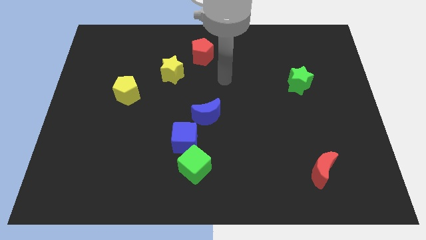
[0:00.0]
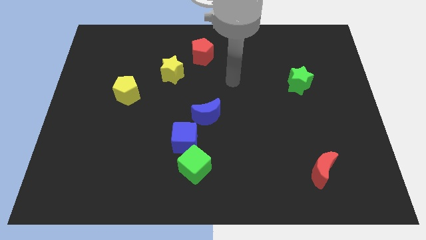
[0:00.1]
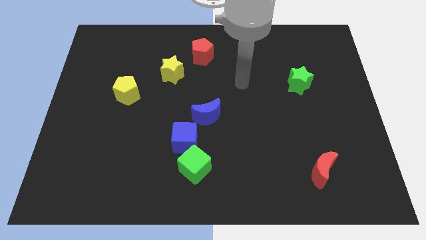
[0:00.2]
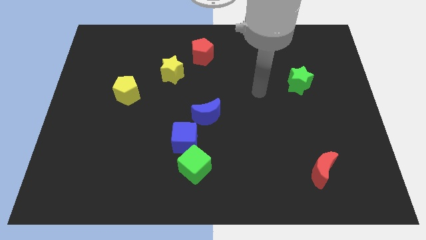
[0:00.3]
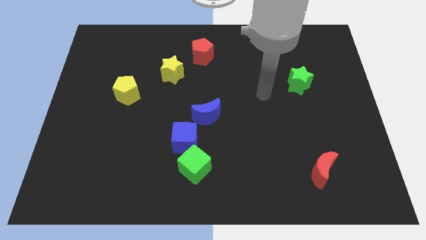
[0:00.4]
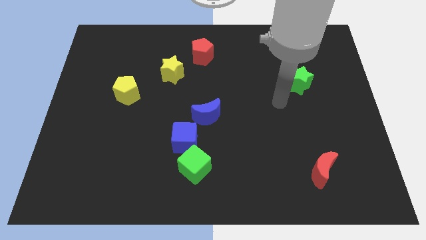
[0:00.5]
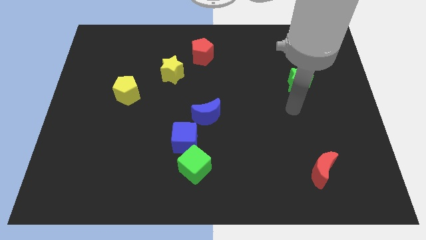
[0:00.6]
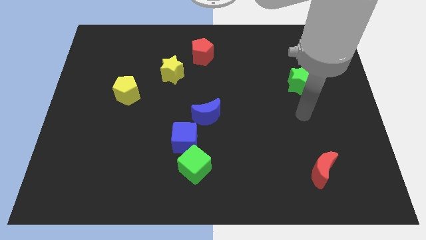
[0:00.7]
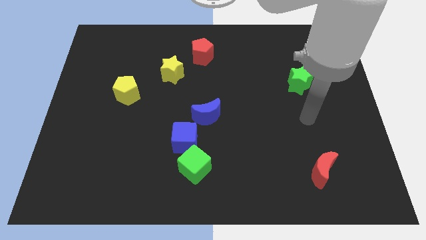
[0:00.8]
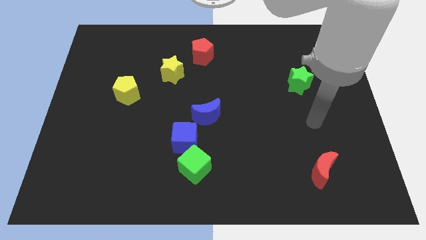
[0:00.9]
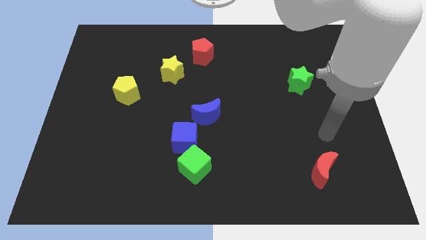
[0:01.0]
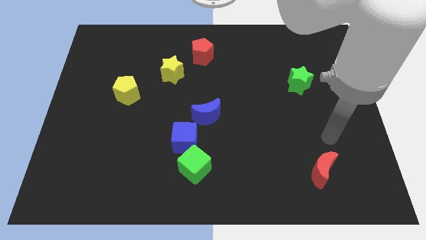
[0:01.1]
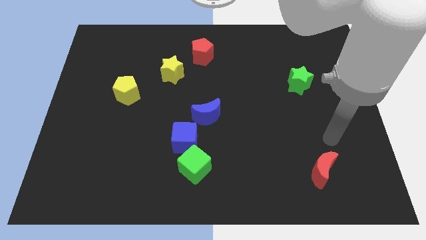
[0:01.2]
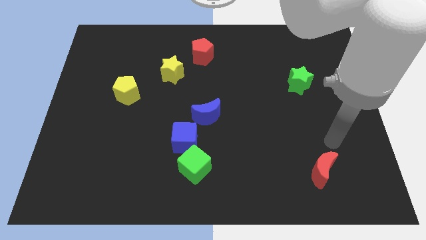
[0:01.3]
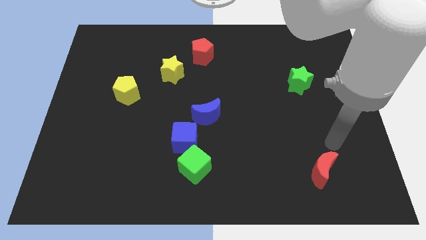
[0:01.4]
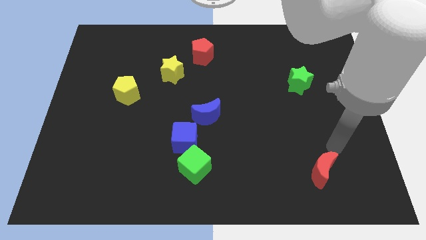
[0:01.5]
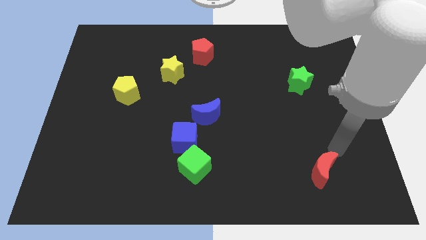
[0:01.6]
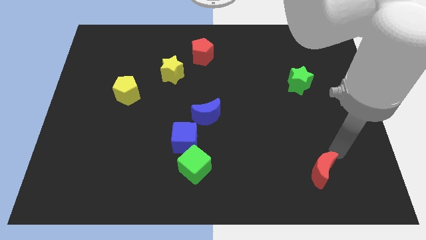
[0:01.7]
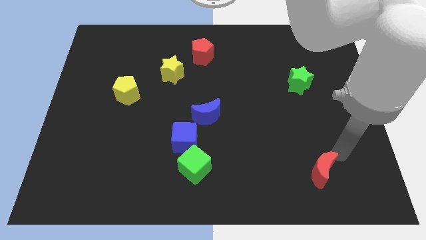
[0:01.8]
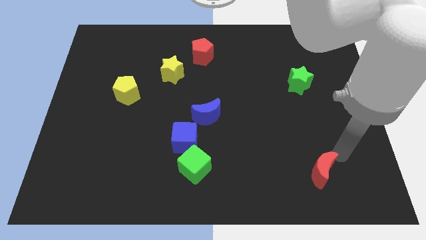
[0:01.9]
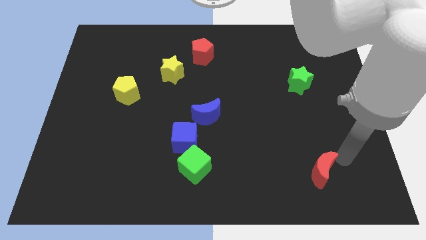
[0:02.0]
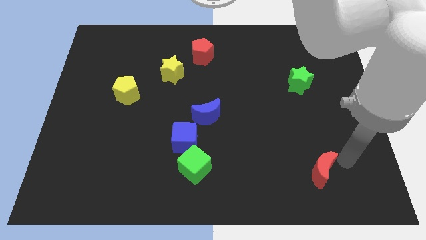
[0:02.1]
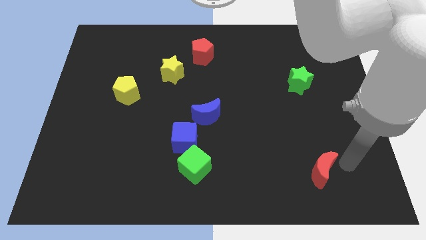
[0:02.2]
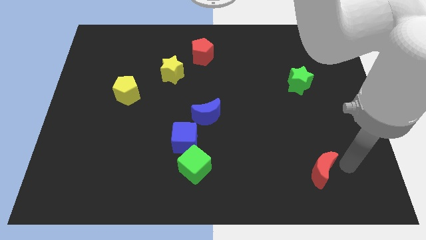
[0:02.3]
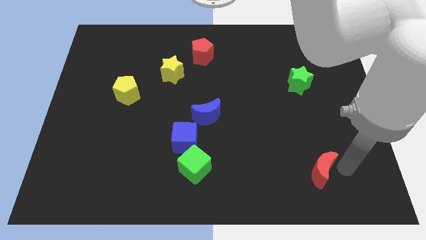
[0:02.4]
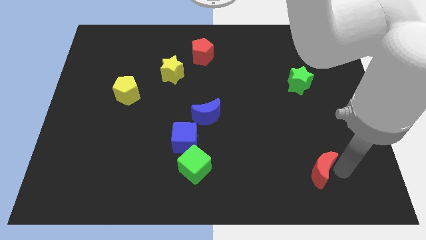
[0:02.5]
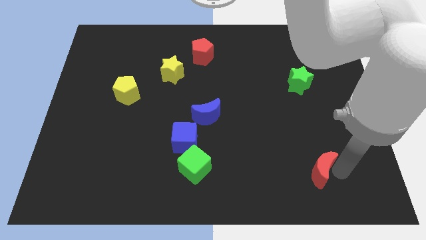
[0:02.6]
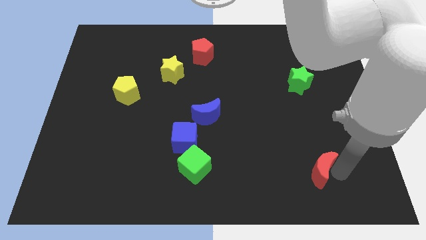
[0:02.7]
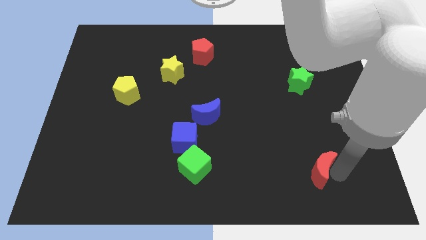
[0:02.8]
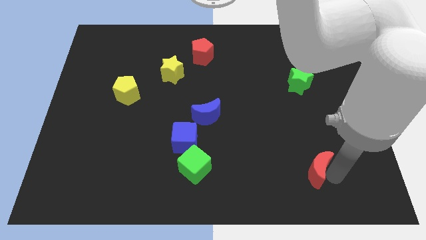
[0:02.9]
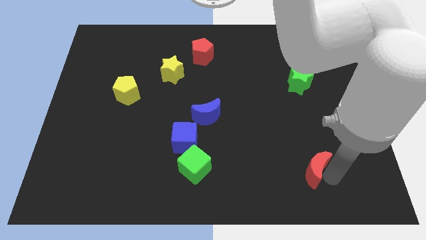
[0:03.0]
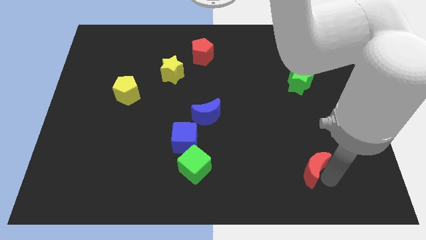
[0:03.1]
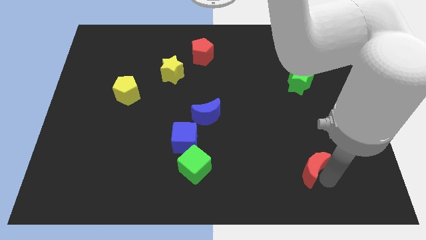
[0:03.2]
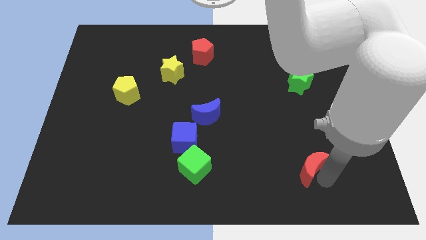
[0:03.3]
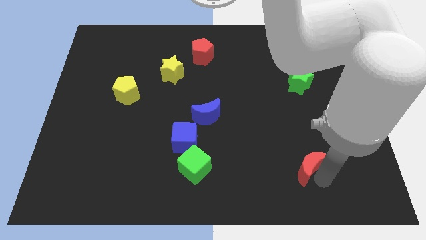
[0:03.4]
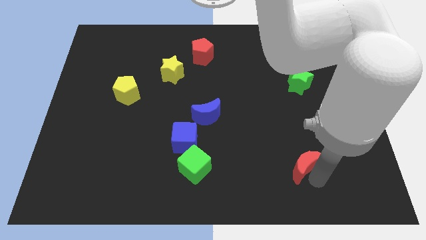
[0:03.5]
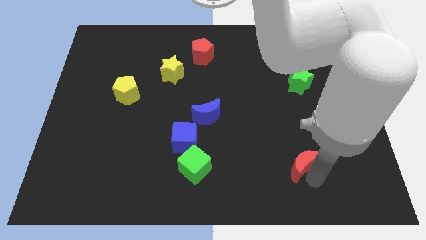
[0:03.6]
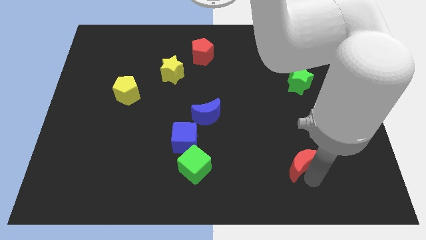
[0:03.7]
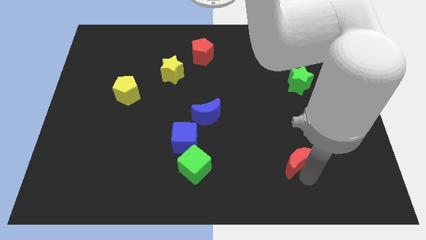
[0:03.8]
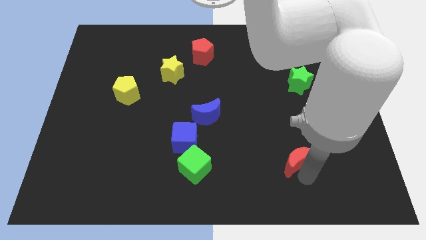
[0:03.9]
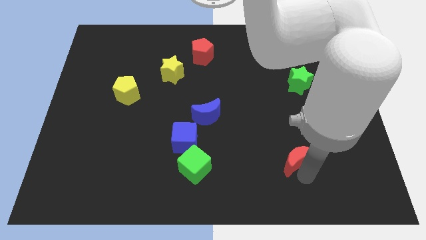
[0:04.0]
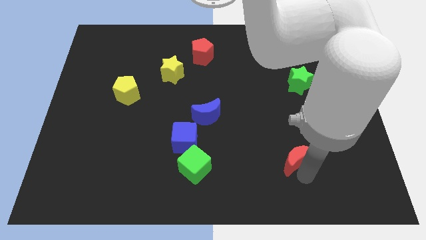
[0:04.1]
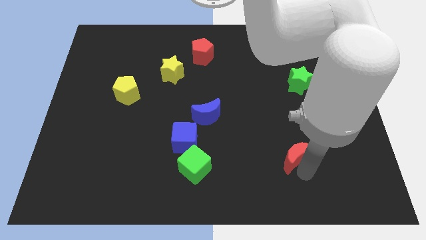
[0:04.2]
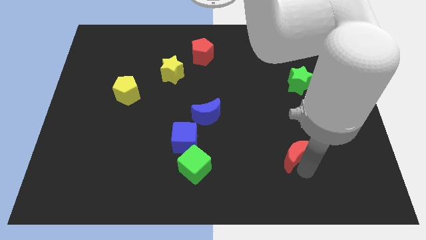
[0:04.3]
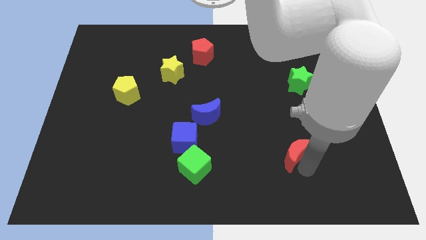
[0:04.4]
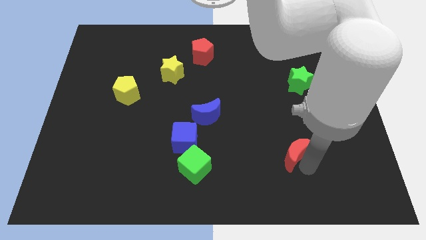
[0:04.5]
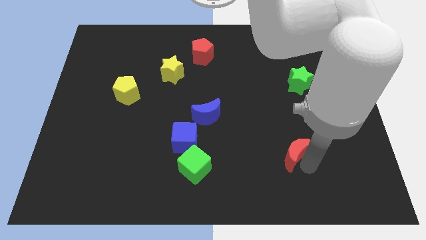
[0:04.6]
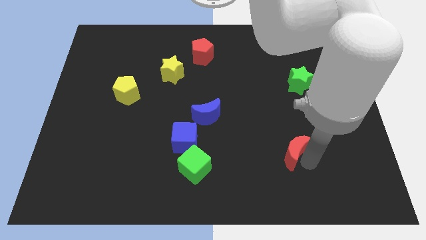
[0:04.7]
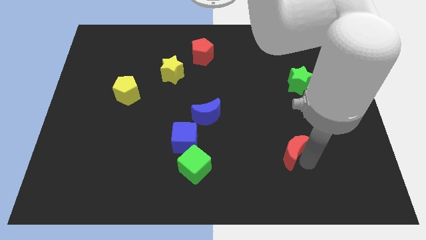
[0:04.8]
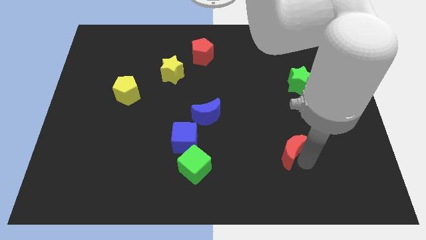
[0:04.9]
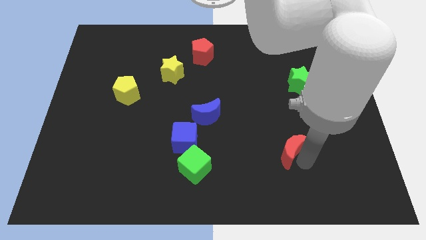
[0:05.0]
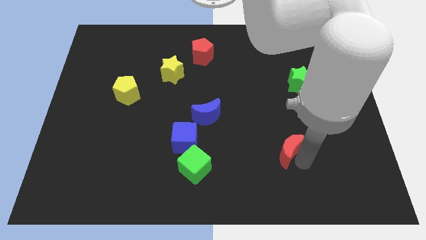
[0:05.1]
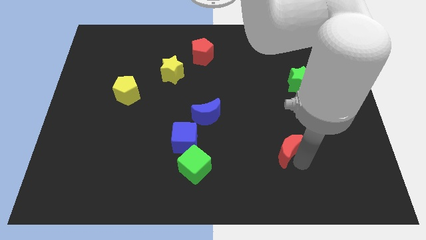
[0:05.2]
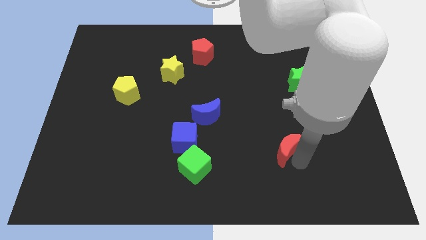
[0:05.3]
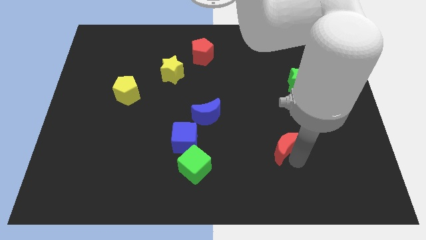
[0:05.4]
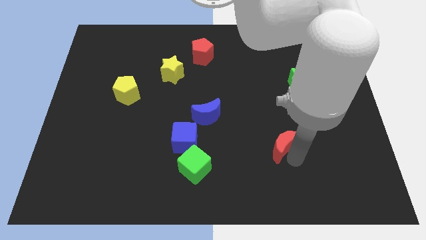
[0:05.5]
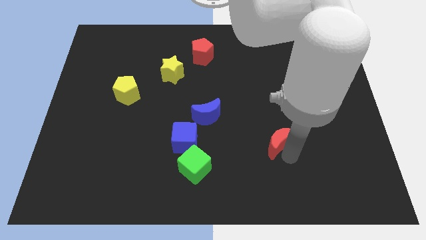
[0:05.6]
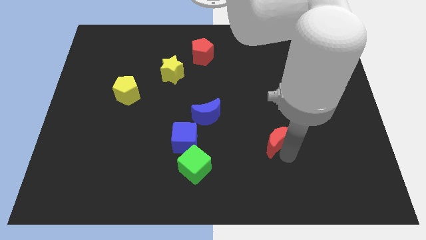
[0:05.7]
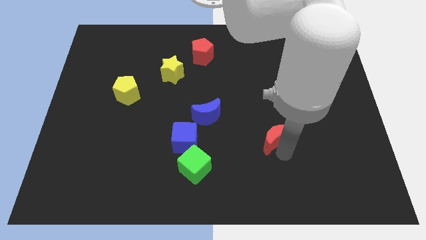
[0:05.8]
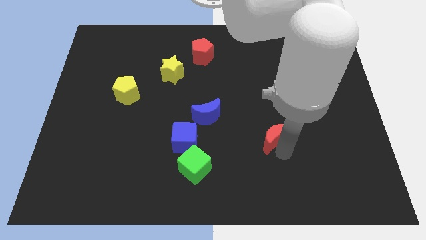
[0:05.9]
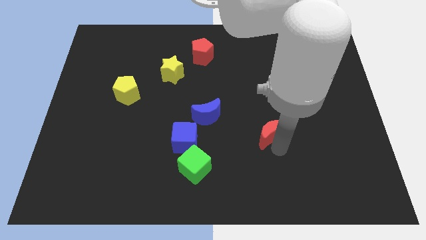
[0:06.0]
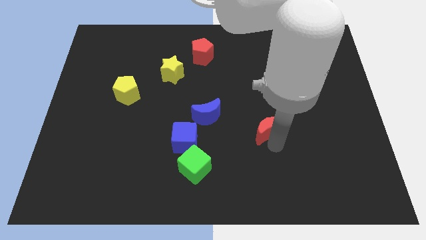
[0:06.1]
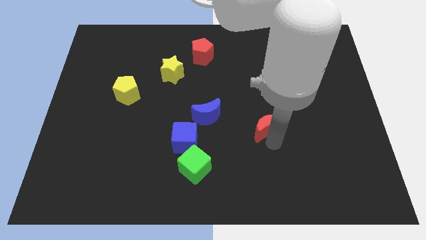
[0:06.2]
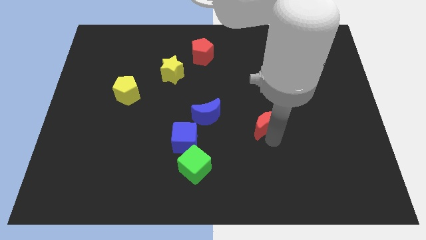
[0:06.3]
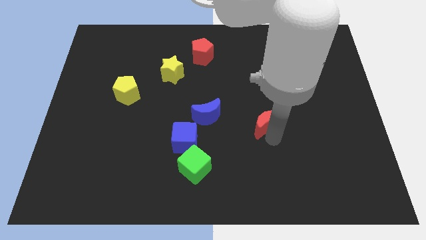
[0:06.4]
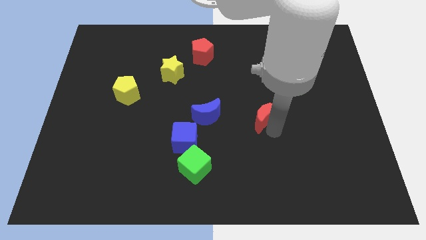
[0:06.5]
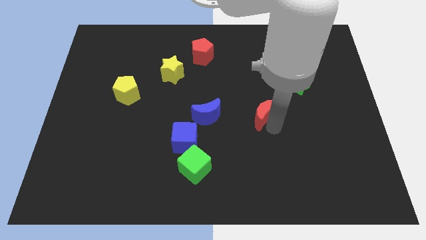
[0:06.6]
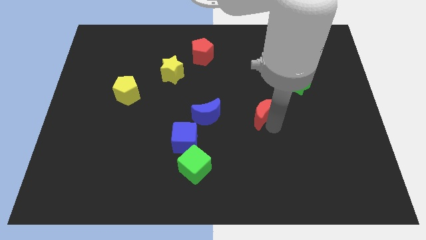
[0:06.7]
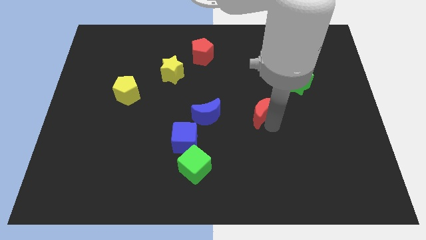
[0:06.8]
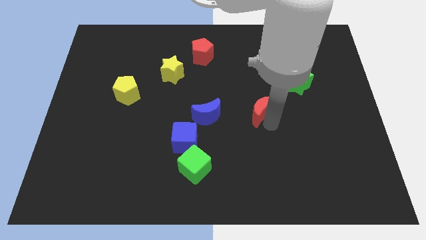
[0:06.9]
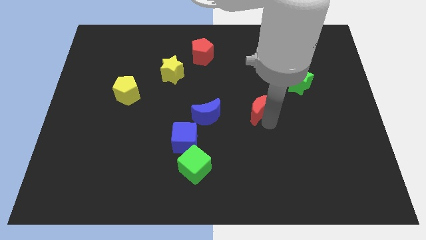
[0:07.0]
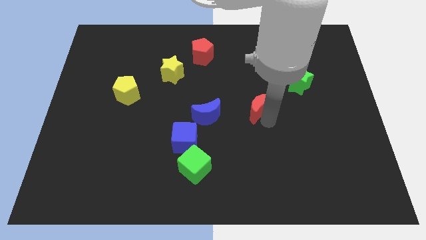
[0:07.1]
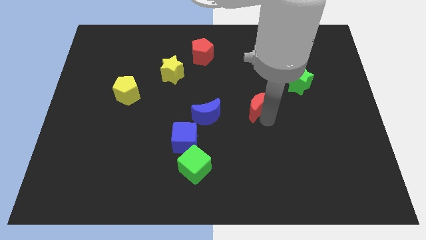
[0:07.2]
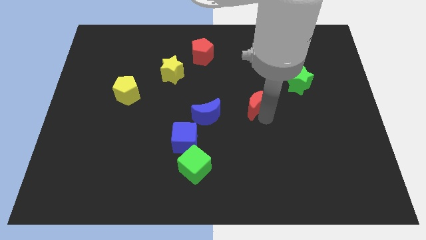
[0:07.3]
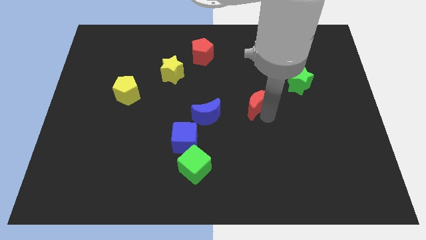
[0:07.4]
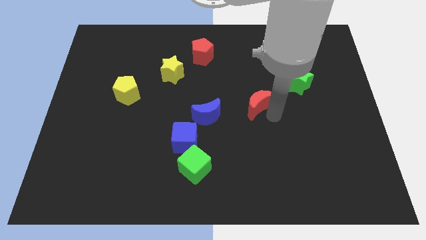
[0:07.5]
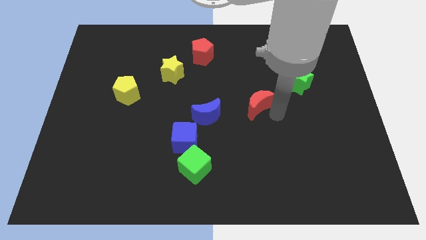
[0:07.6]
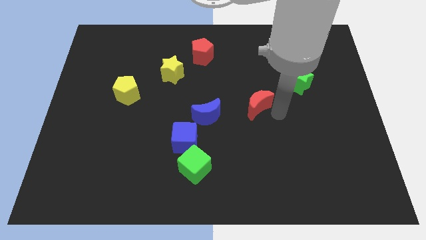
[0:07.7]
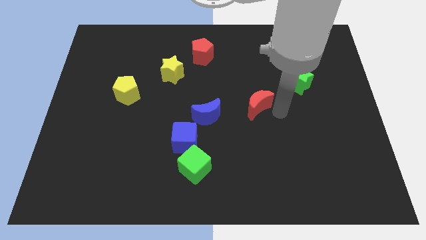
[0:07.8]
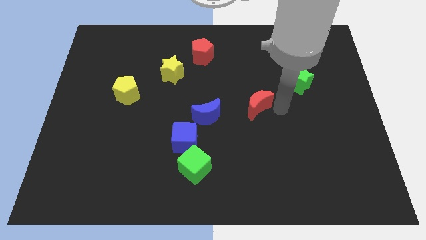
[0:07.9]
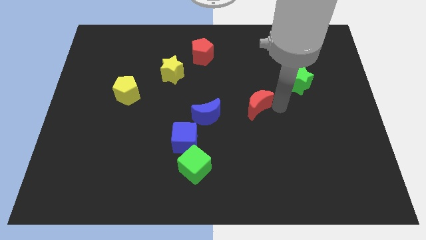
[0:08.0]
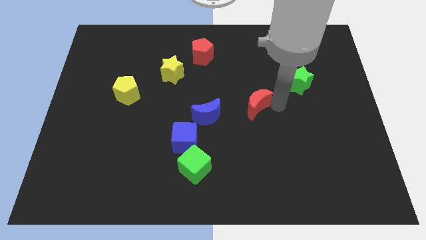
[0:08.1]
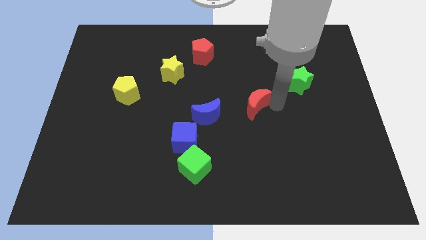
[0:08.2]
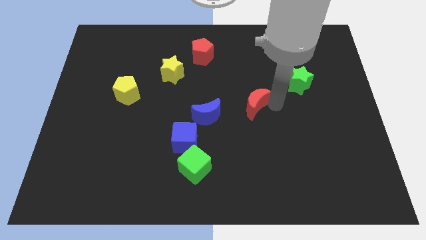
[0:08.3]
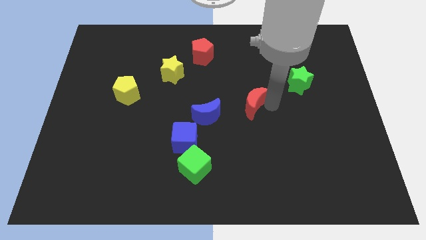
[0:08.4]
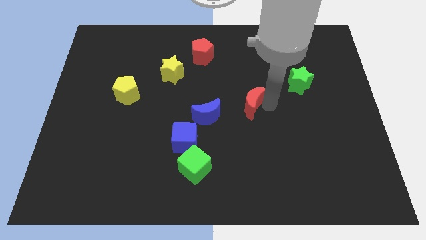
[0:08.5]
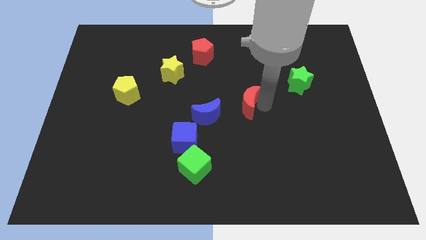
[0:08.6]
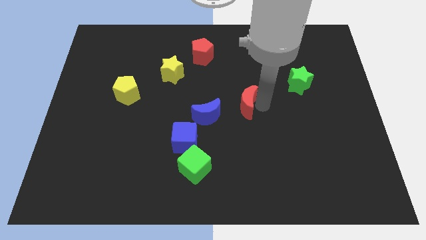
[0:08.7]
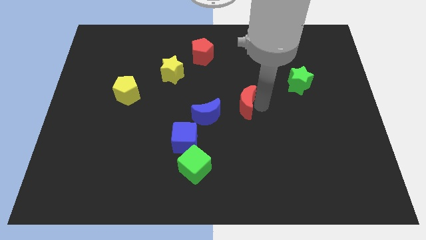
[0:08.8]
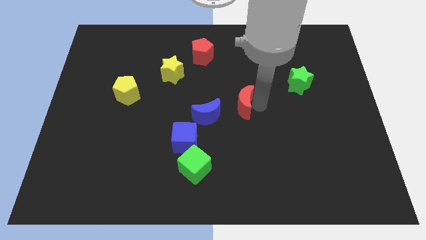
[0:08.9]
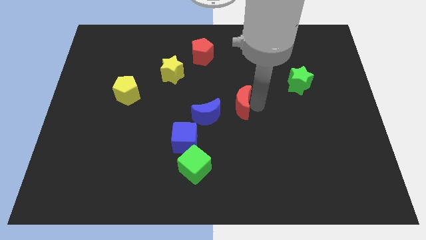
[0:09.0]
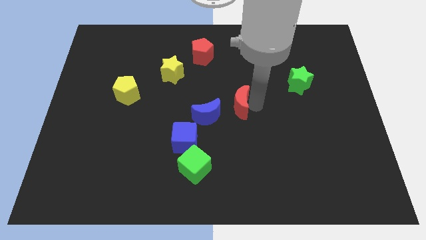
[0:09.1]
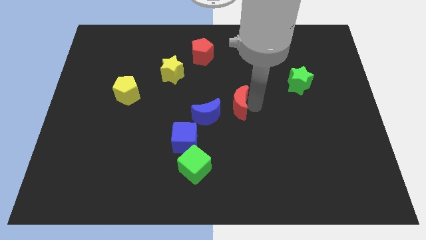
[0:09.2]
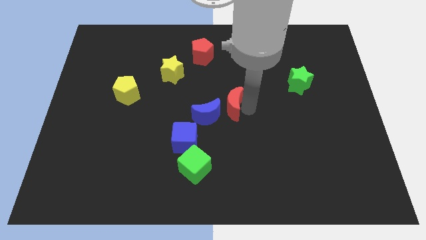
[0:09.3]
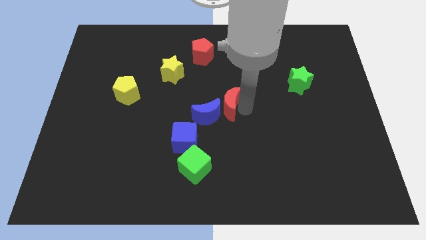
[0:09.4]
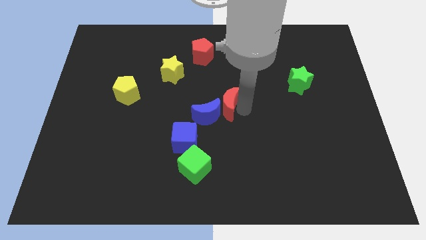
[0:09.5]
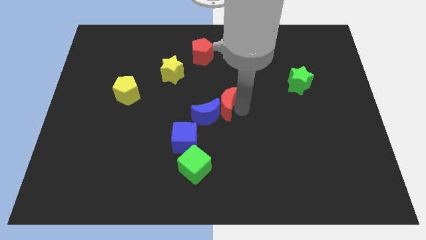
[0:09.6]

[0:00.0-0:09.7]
move the red moon close to the blue moon
